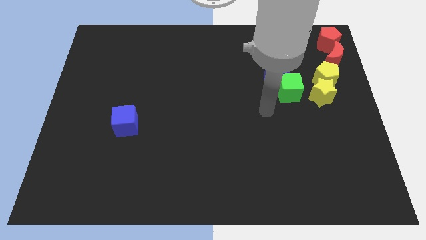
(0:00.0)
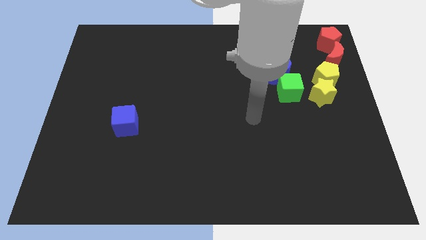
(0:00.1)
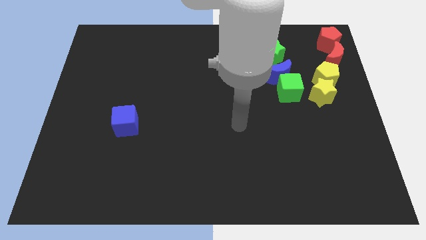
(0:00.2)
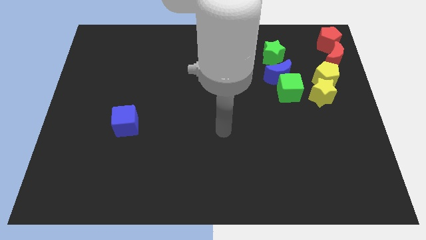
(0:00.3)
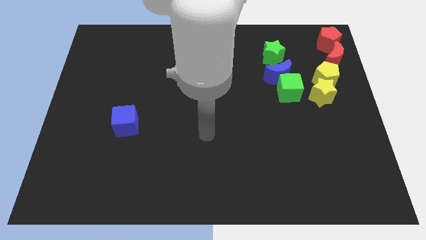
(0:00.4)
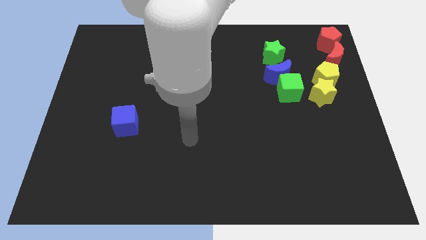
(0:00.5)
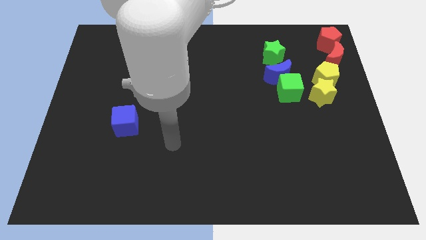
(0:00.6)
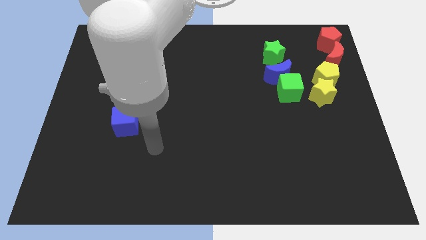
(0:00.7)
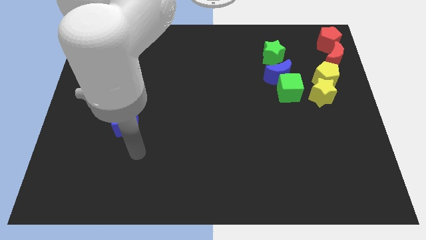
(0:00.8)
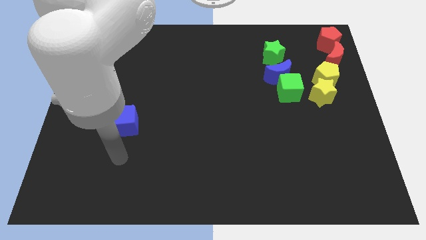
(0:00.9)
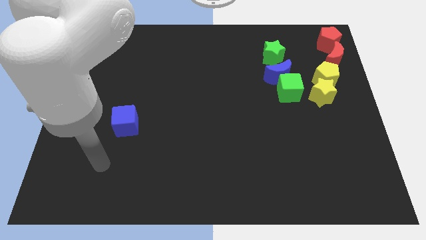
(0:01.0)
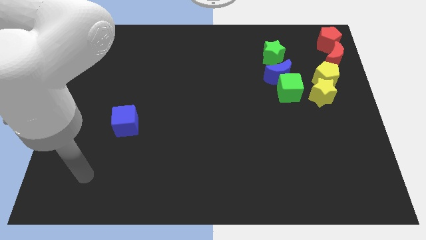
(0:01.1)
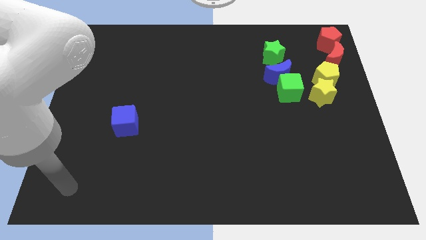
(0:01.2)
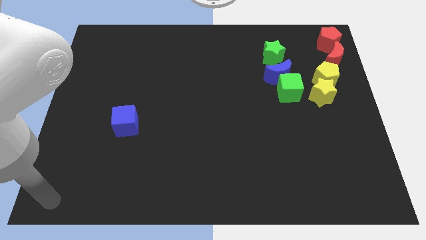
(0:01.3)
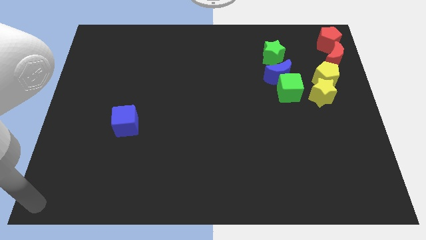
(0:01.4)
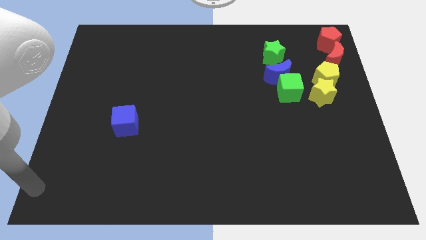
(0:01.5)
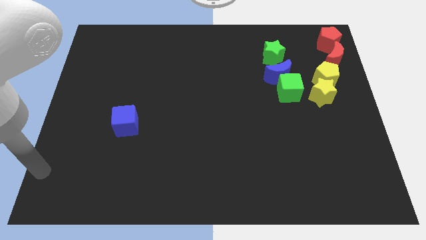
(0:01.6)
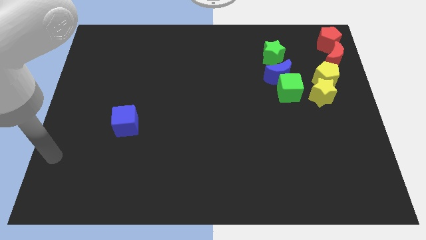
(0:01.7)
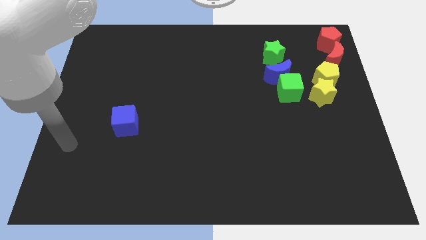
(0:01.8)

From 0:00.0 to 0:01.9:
move your arm towards the blue cube

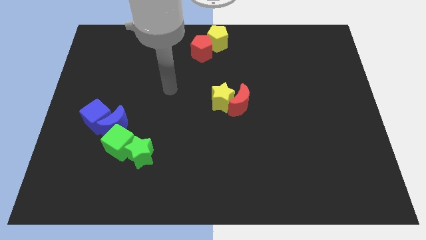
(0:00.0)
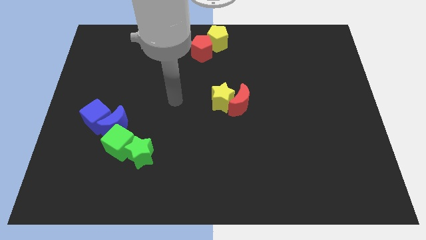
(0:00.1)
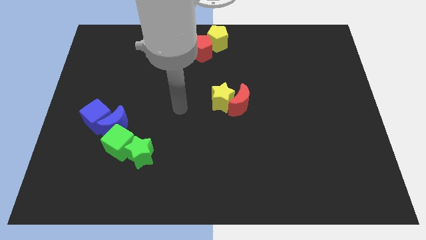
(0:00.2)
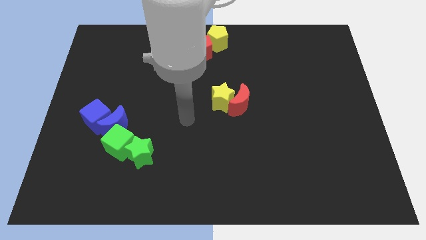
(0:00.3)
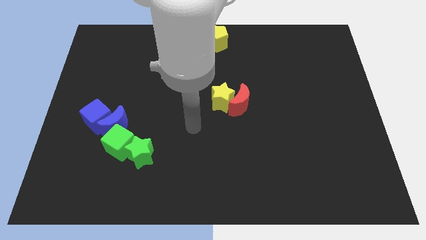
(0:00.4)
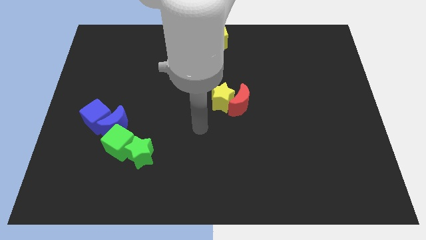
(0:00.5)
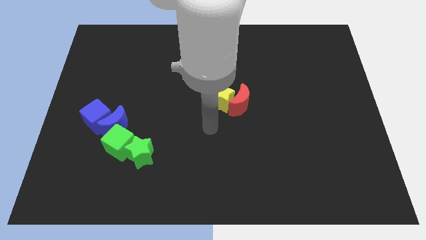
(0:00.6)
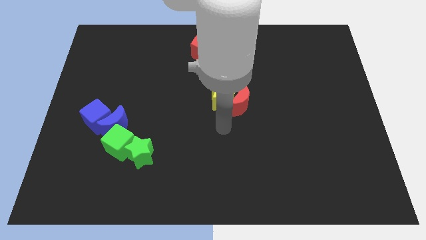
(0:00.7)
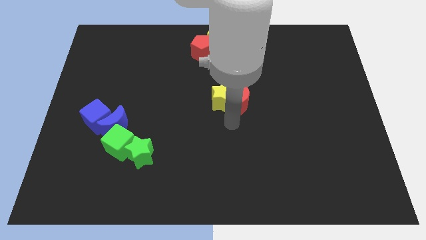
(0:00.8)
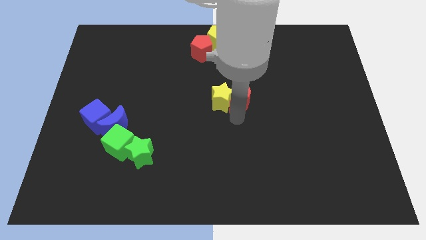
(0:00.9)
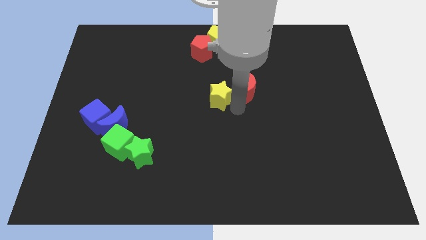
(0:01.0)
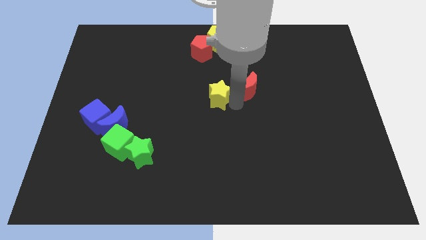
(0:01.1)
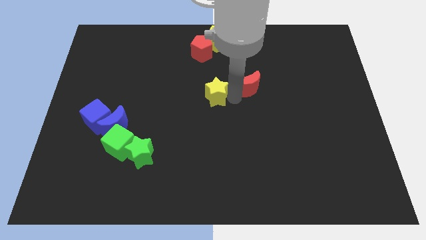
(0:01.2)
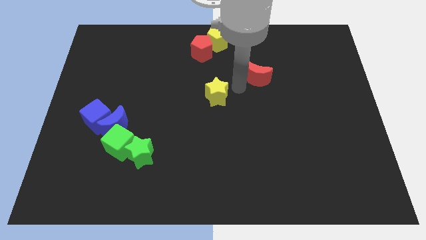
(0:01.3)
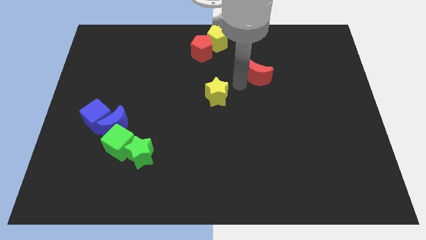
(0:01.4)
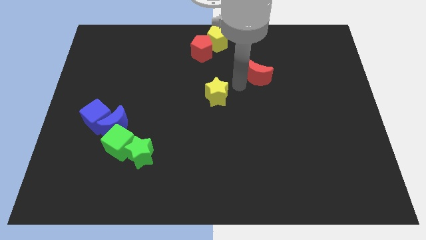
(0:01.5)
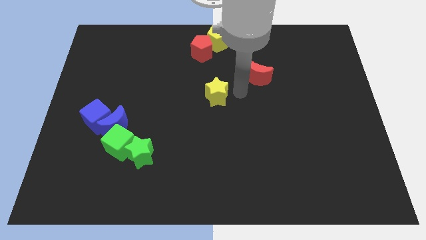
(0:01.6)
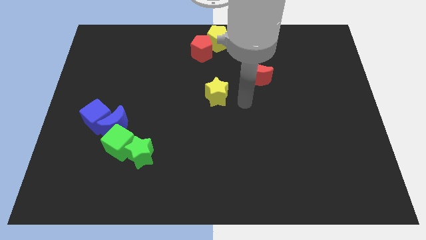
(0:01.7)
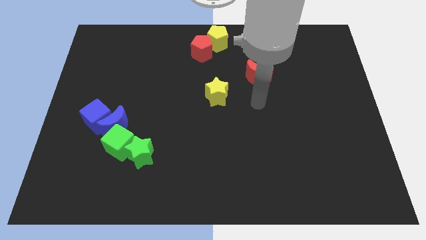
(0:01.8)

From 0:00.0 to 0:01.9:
separate the red moon from the yellow star

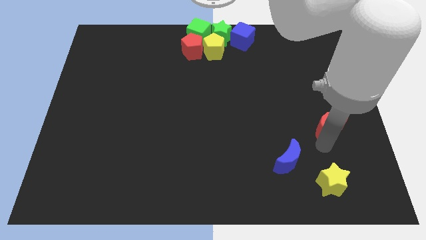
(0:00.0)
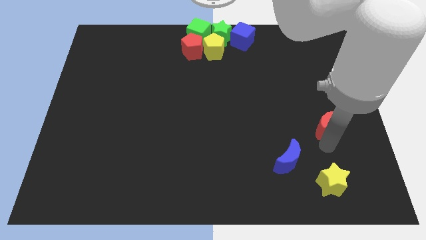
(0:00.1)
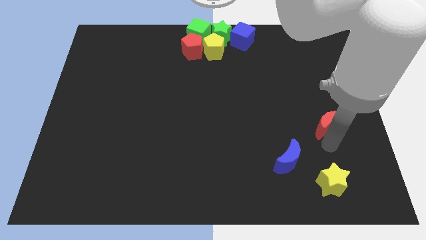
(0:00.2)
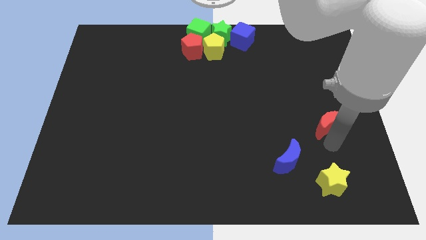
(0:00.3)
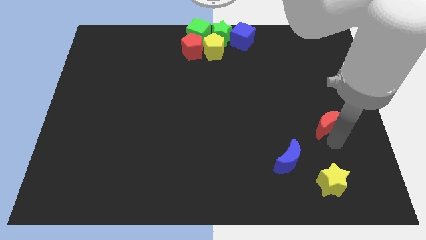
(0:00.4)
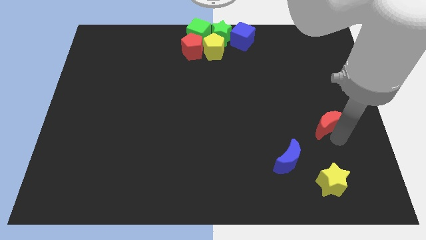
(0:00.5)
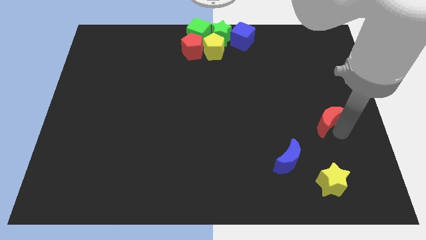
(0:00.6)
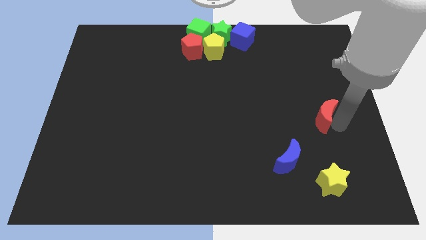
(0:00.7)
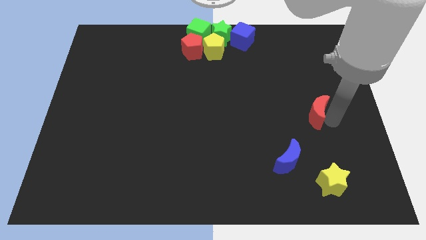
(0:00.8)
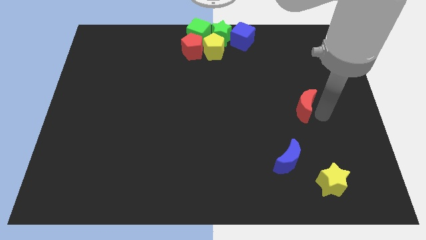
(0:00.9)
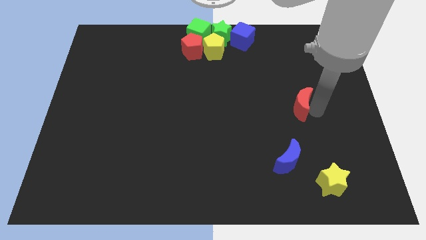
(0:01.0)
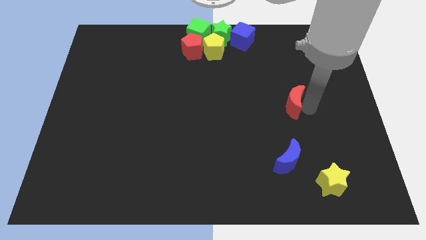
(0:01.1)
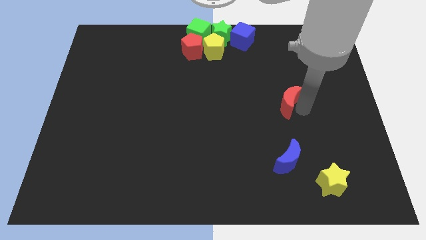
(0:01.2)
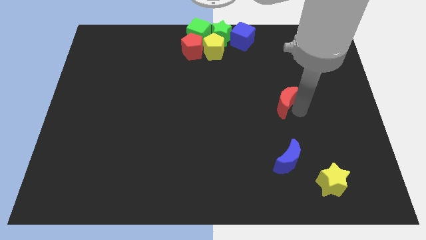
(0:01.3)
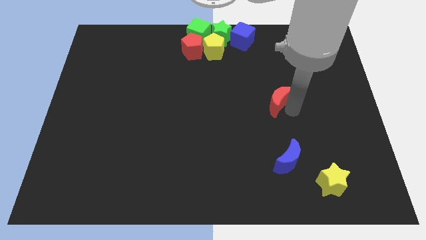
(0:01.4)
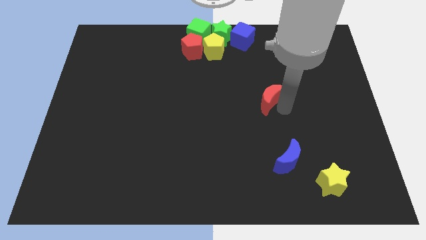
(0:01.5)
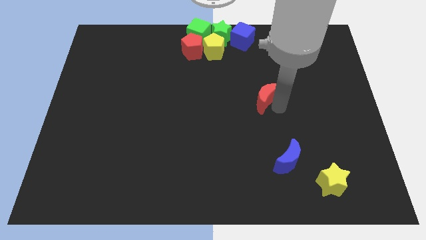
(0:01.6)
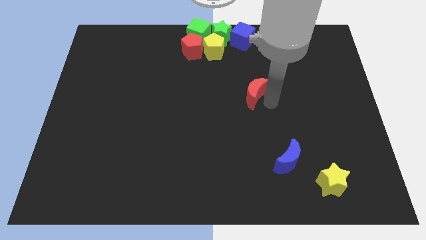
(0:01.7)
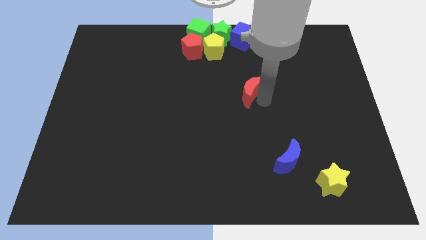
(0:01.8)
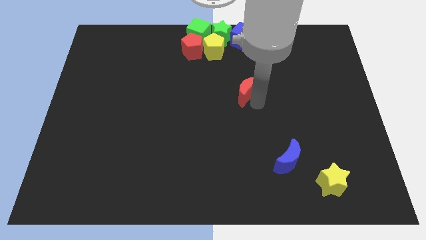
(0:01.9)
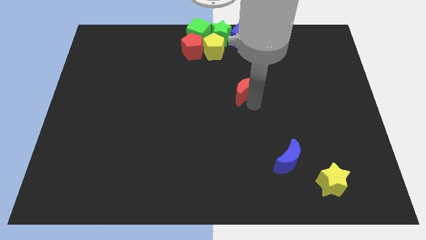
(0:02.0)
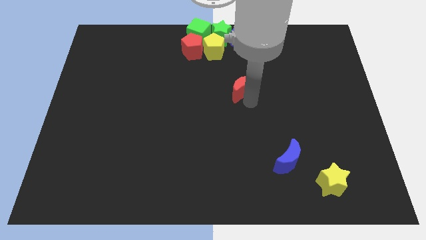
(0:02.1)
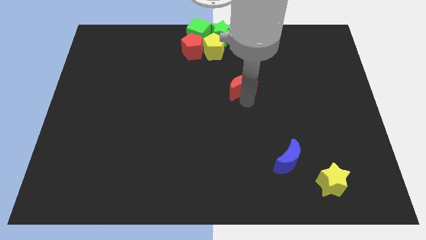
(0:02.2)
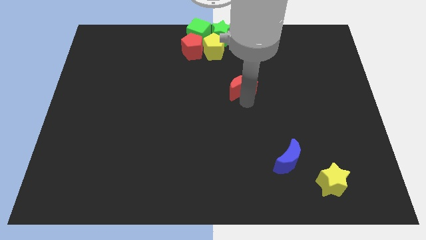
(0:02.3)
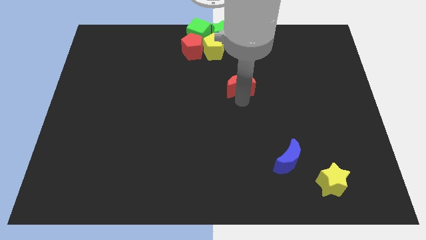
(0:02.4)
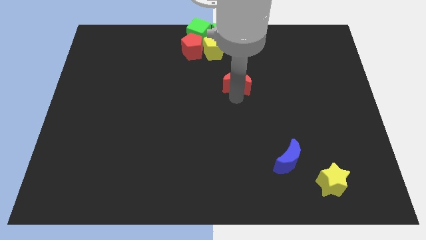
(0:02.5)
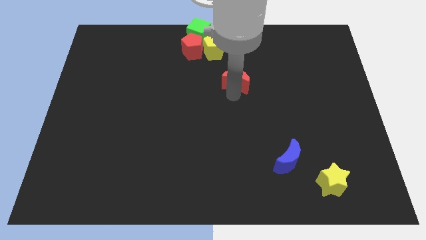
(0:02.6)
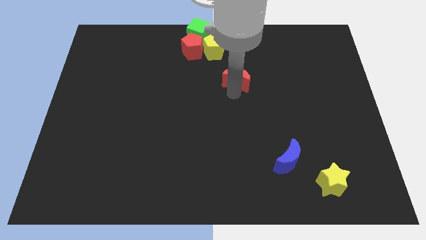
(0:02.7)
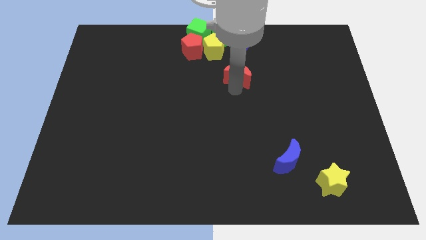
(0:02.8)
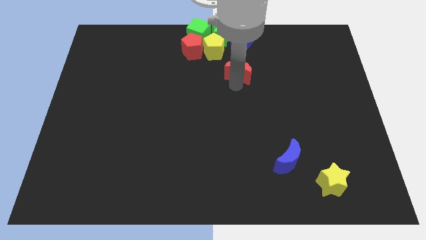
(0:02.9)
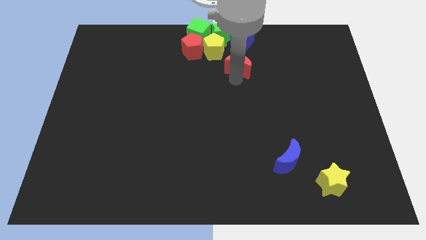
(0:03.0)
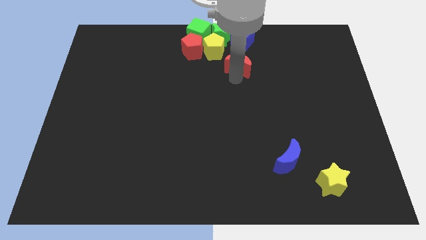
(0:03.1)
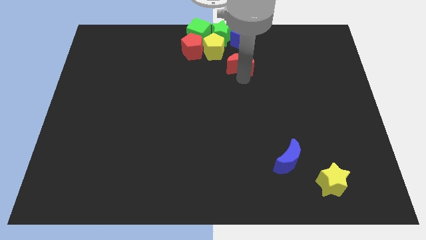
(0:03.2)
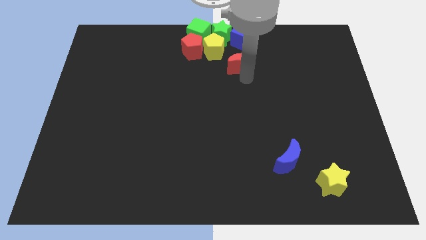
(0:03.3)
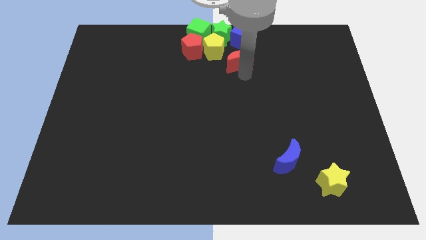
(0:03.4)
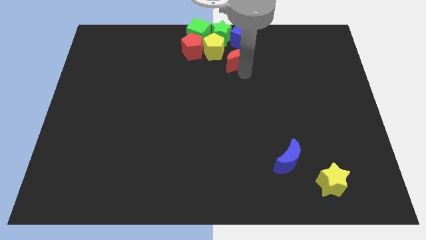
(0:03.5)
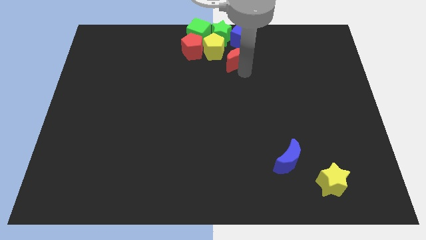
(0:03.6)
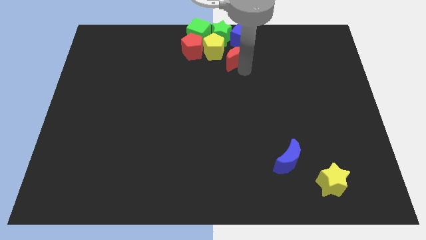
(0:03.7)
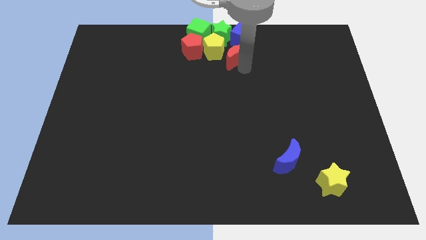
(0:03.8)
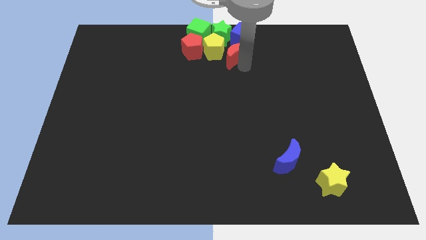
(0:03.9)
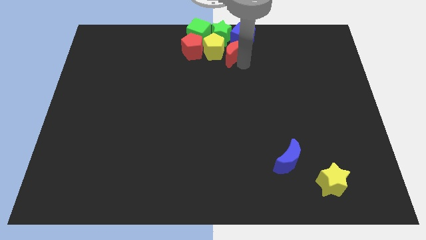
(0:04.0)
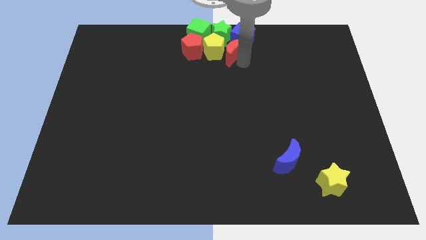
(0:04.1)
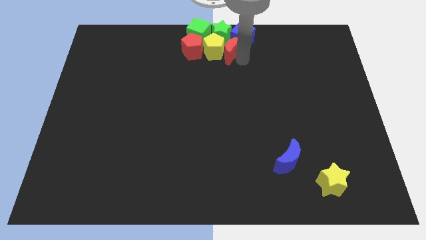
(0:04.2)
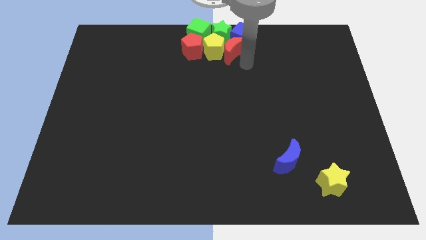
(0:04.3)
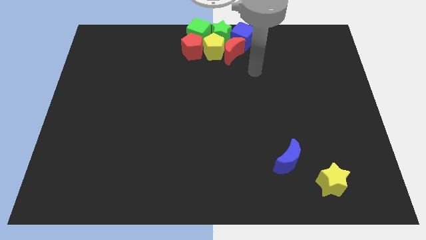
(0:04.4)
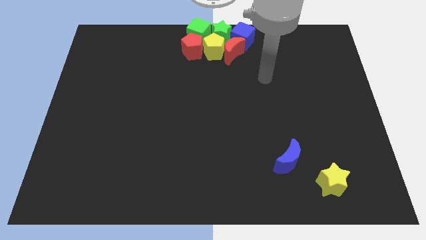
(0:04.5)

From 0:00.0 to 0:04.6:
push the red crescent to the top center of the board

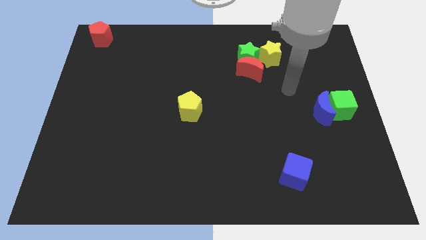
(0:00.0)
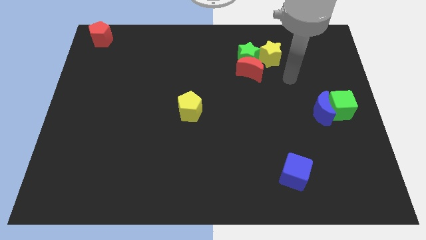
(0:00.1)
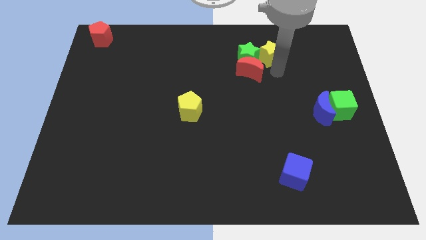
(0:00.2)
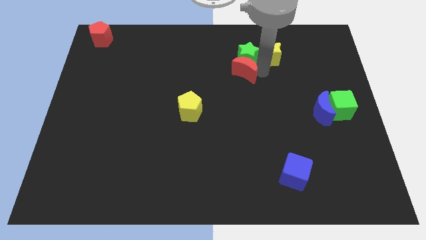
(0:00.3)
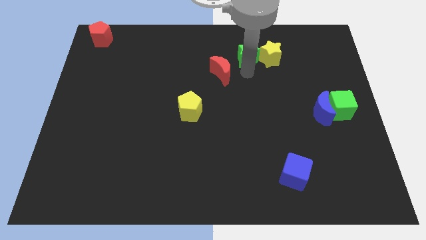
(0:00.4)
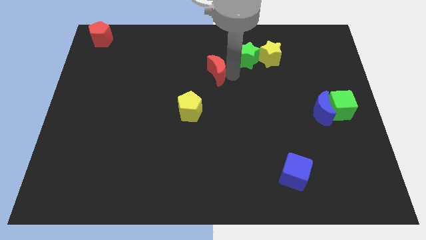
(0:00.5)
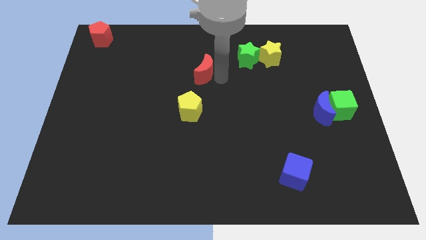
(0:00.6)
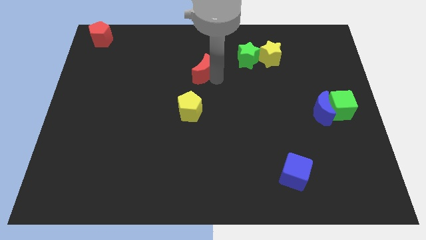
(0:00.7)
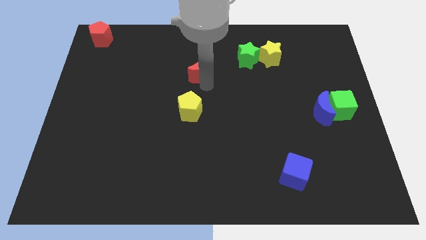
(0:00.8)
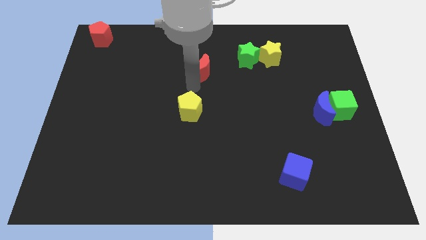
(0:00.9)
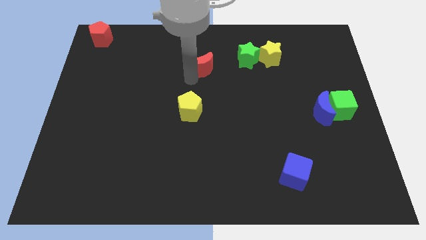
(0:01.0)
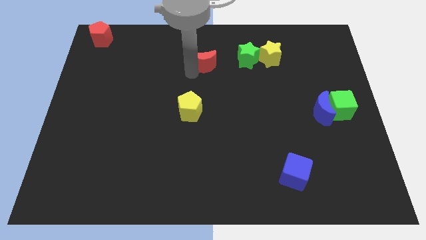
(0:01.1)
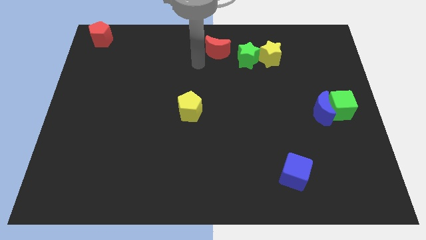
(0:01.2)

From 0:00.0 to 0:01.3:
place the red moon left to the green star
